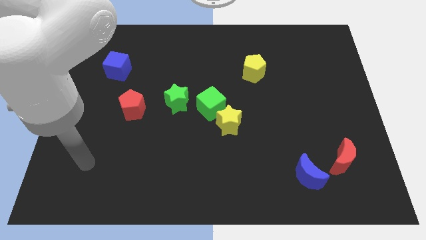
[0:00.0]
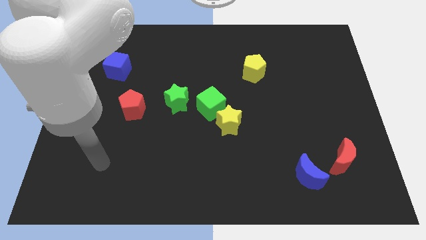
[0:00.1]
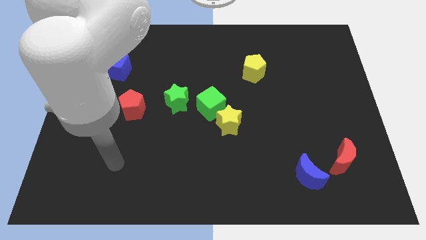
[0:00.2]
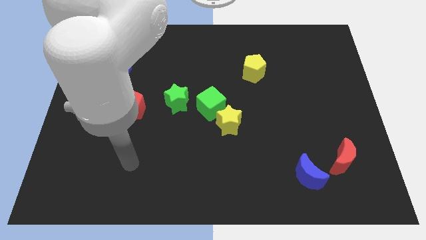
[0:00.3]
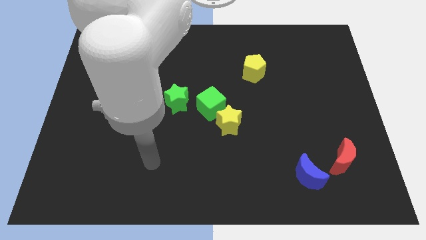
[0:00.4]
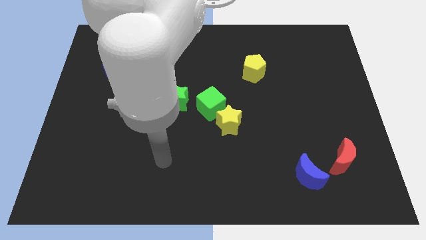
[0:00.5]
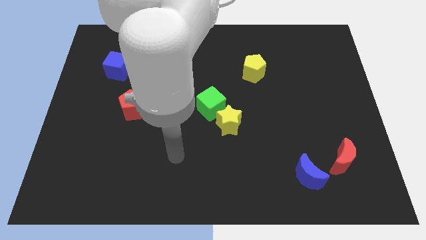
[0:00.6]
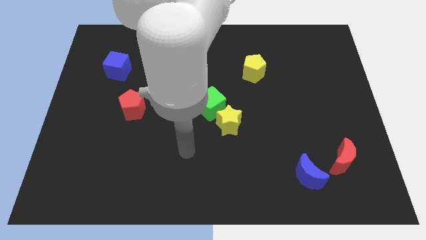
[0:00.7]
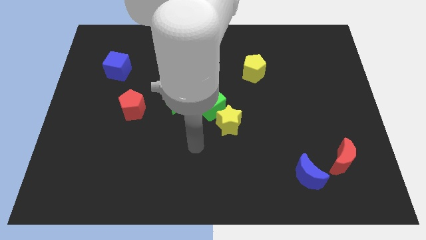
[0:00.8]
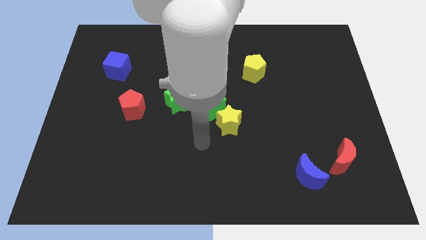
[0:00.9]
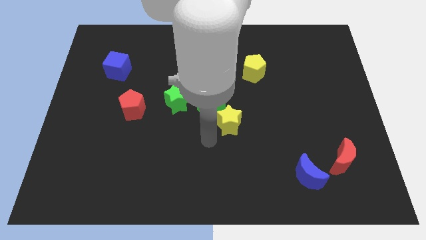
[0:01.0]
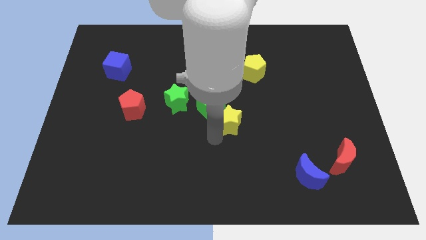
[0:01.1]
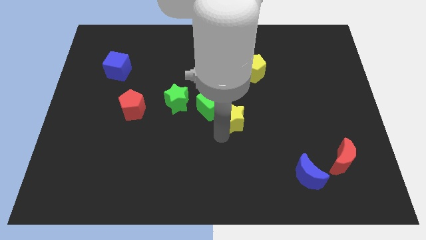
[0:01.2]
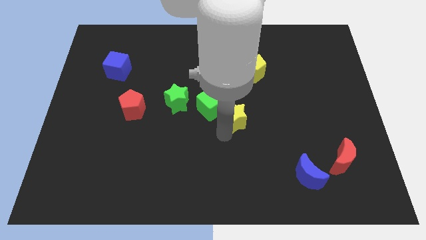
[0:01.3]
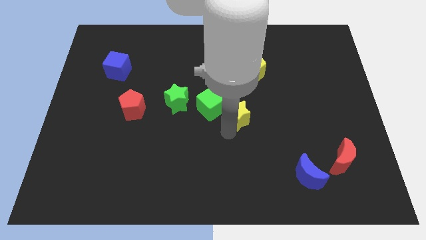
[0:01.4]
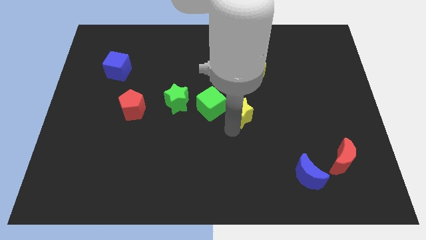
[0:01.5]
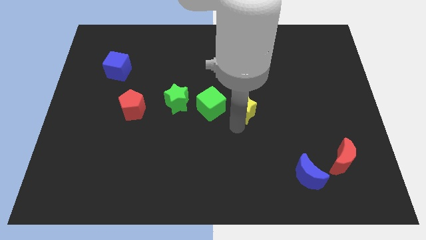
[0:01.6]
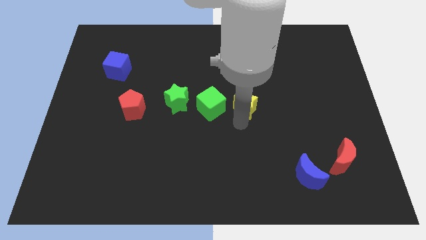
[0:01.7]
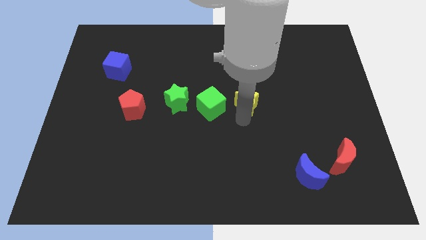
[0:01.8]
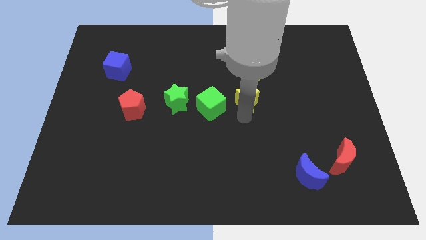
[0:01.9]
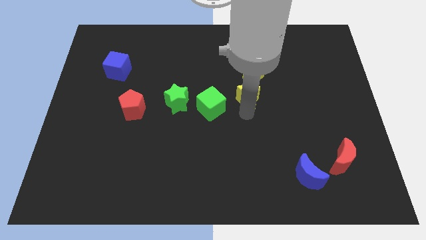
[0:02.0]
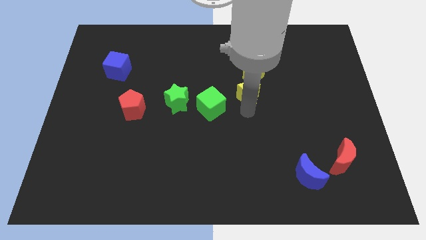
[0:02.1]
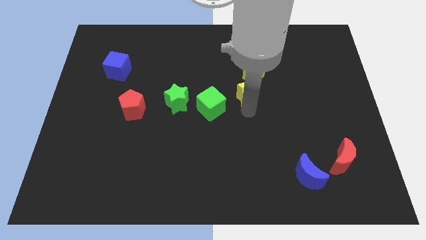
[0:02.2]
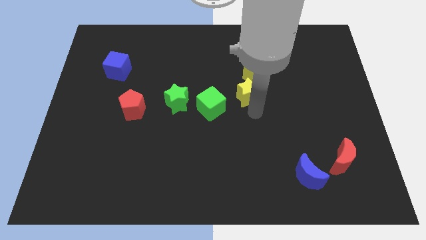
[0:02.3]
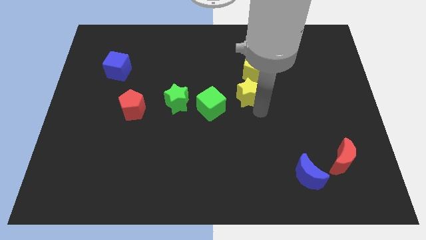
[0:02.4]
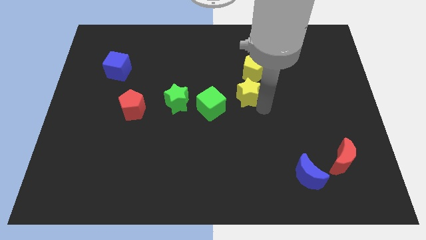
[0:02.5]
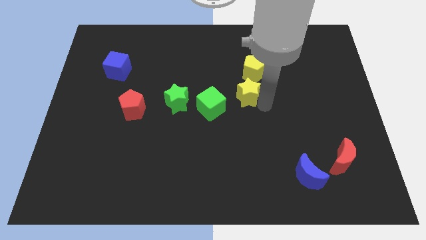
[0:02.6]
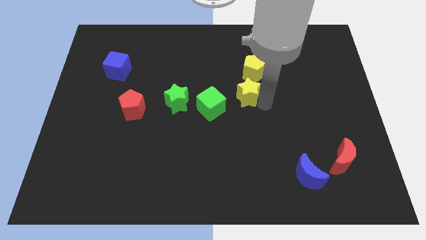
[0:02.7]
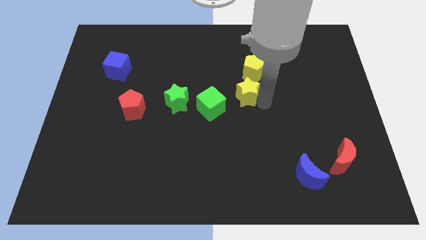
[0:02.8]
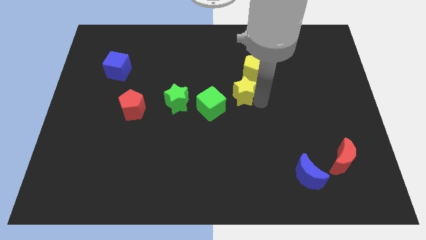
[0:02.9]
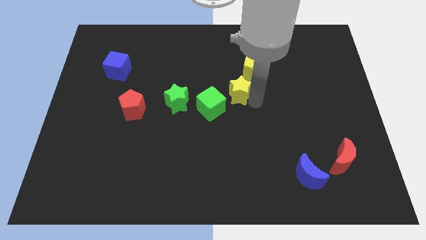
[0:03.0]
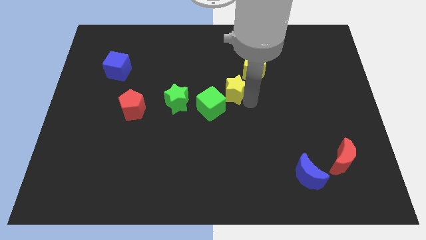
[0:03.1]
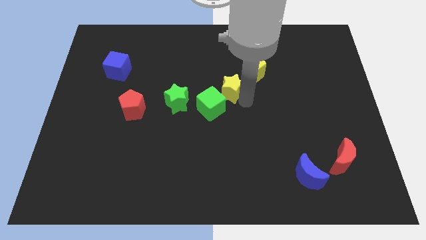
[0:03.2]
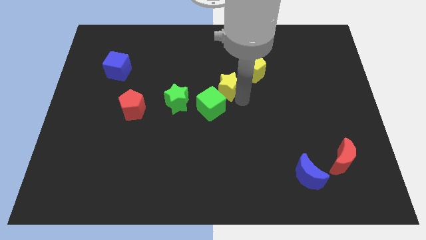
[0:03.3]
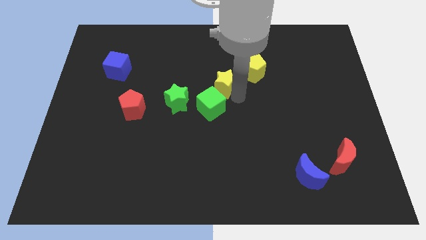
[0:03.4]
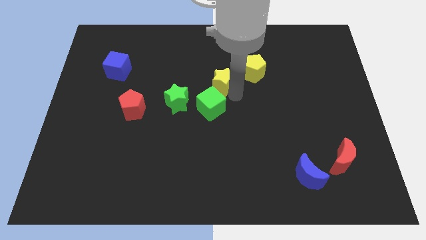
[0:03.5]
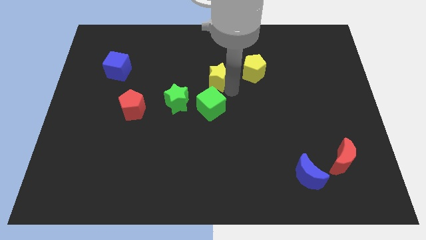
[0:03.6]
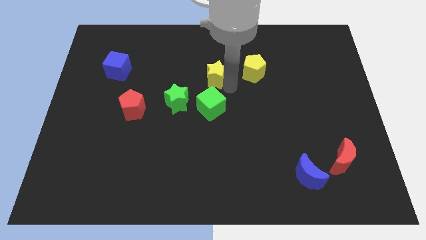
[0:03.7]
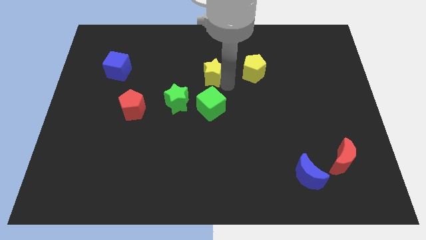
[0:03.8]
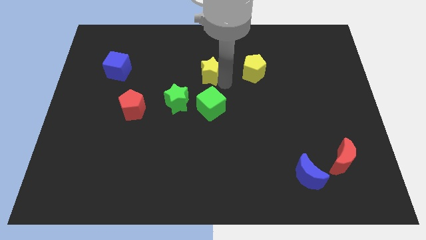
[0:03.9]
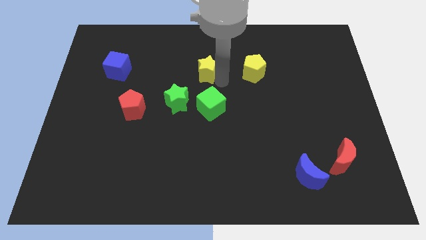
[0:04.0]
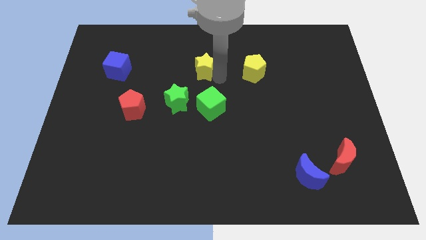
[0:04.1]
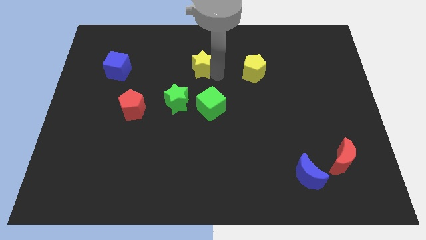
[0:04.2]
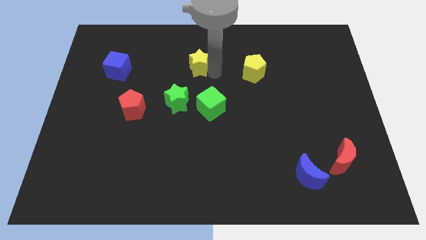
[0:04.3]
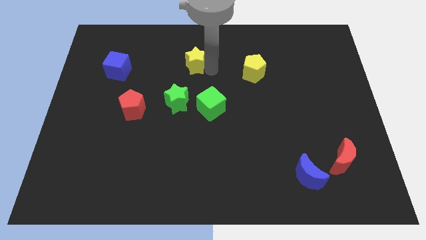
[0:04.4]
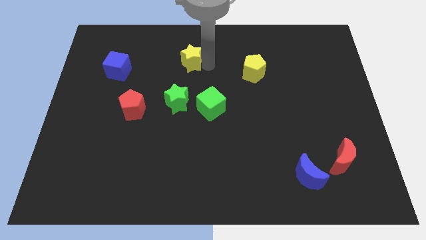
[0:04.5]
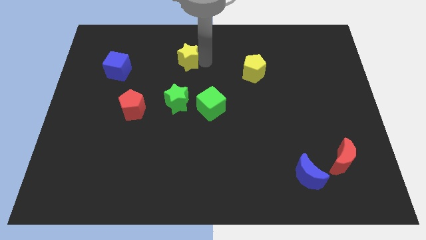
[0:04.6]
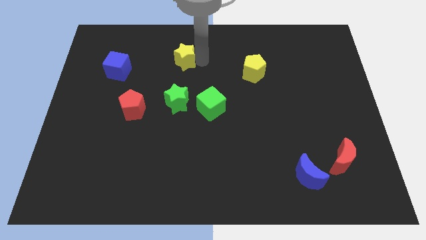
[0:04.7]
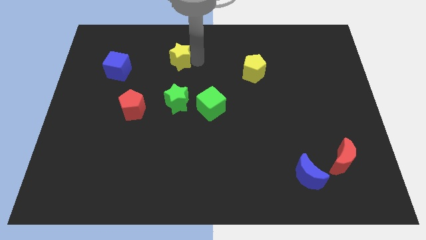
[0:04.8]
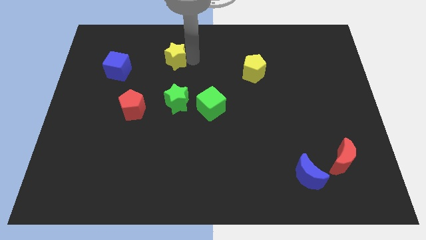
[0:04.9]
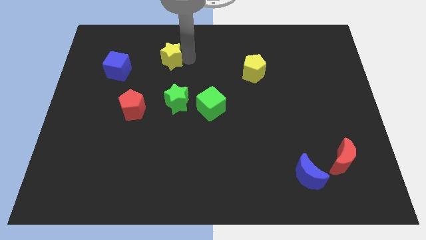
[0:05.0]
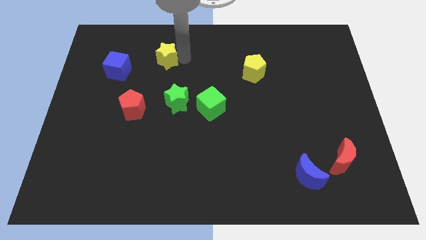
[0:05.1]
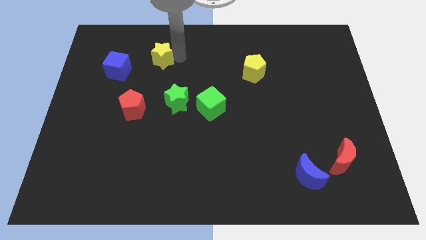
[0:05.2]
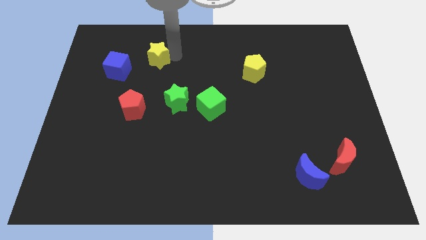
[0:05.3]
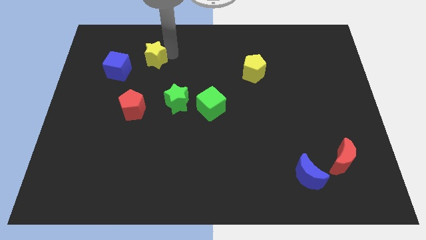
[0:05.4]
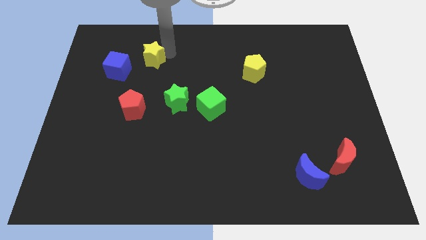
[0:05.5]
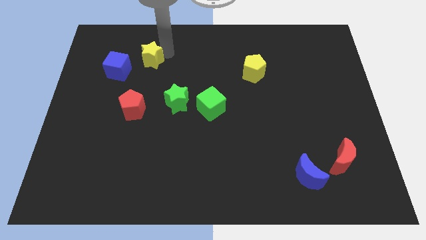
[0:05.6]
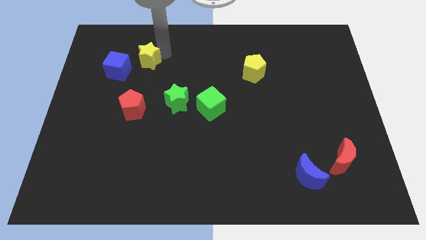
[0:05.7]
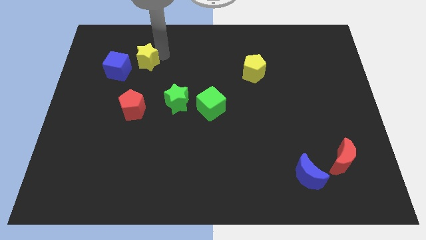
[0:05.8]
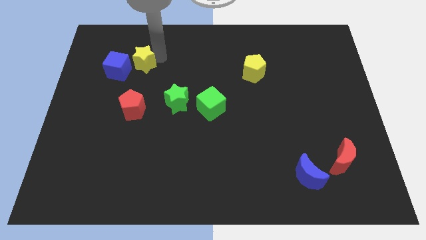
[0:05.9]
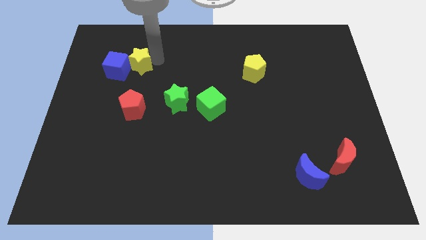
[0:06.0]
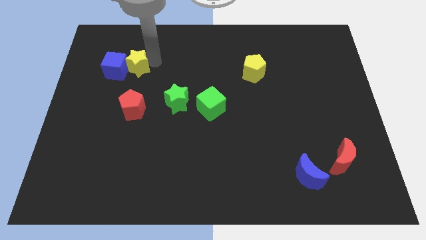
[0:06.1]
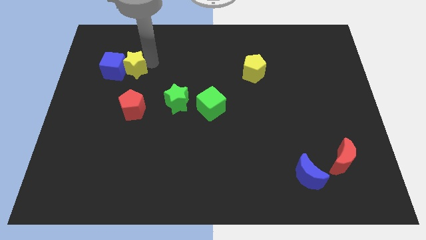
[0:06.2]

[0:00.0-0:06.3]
move the yellow star close to the blue cube

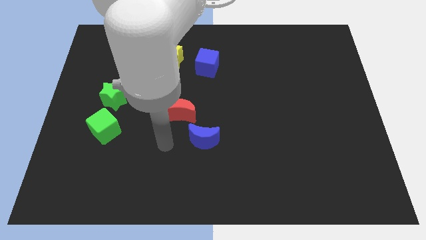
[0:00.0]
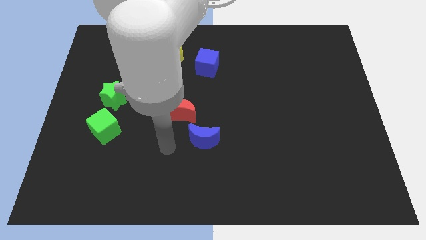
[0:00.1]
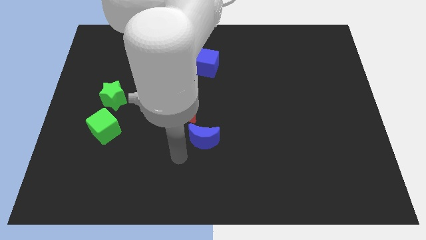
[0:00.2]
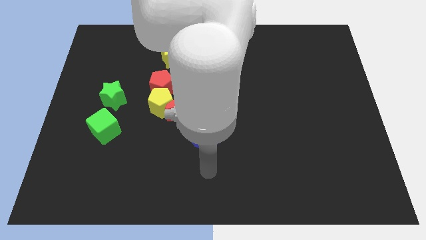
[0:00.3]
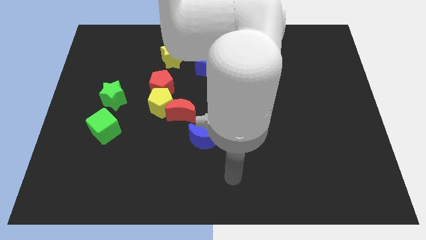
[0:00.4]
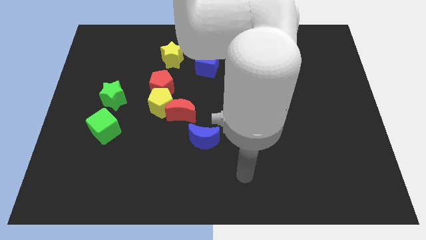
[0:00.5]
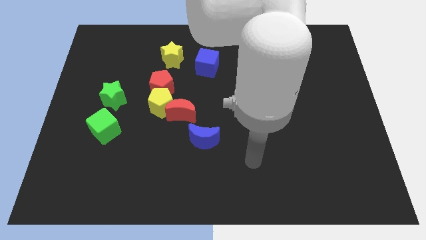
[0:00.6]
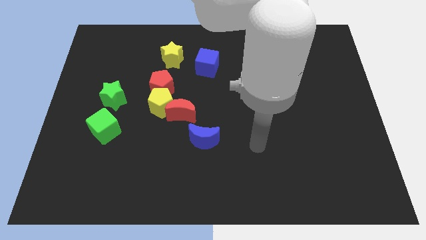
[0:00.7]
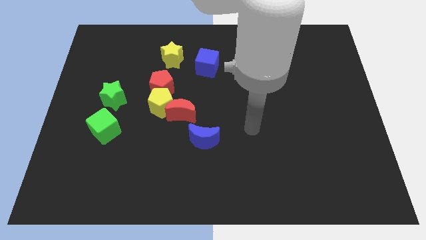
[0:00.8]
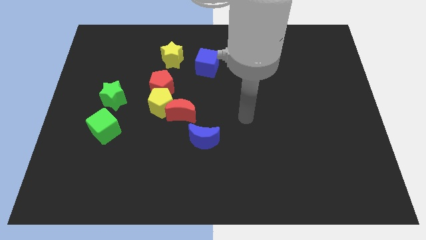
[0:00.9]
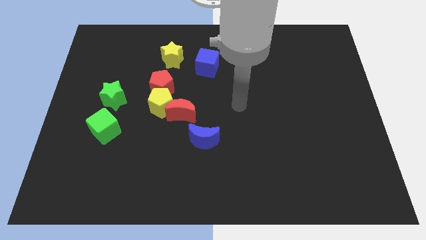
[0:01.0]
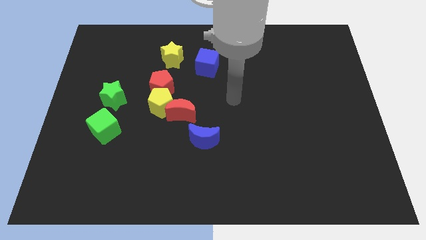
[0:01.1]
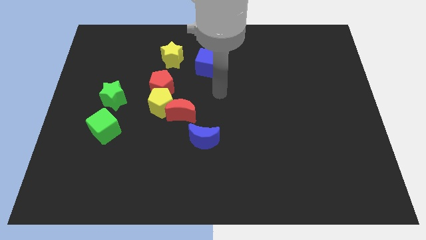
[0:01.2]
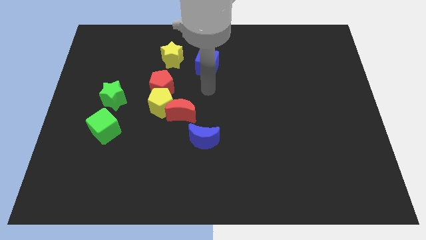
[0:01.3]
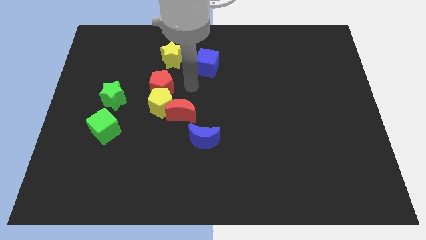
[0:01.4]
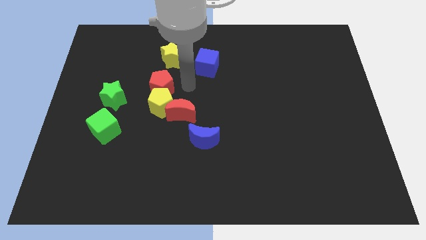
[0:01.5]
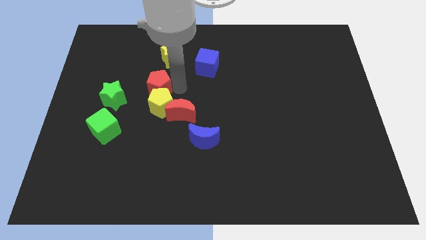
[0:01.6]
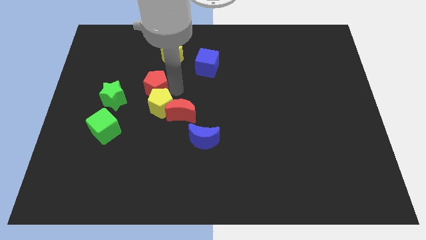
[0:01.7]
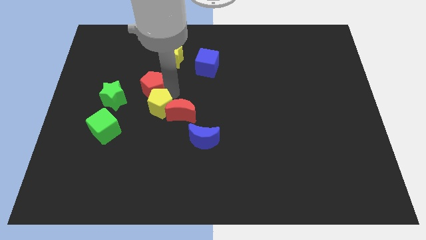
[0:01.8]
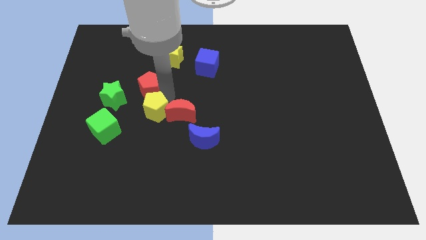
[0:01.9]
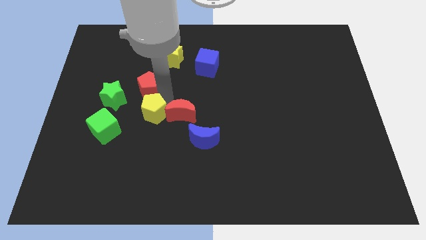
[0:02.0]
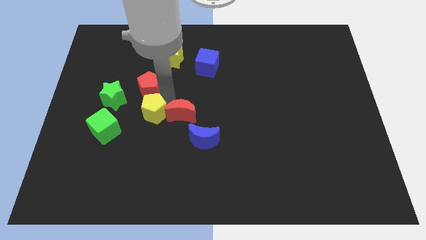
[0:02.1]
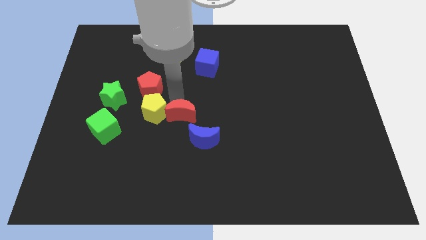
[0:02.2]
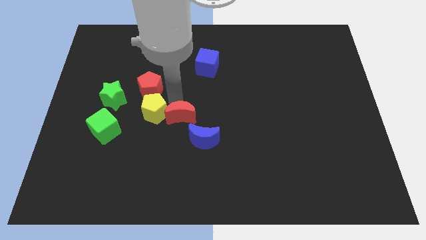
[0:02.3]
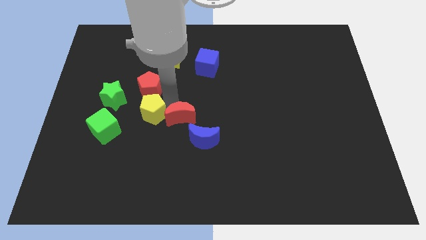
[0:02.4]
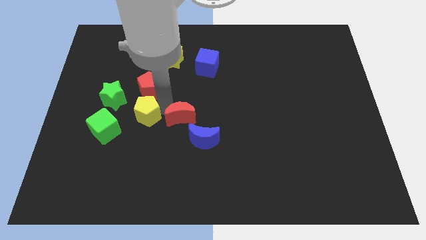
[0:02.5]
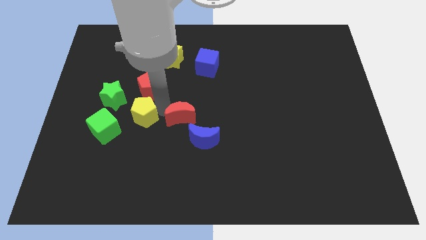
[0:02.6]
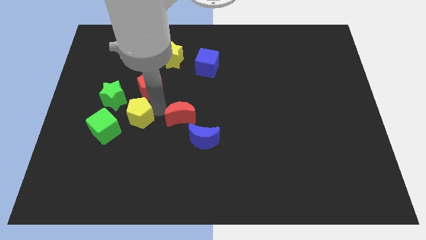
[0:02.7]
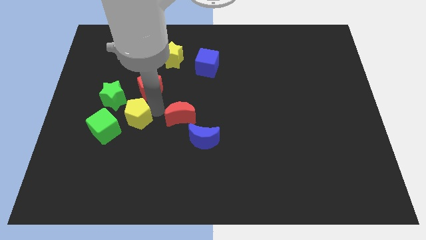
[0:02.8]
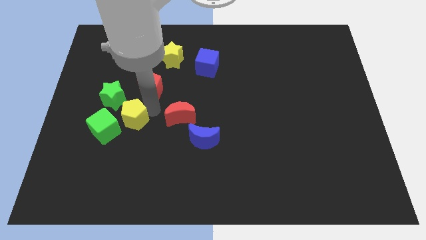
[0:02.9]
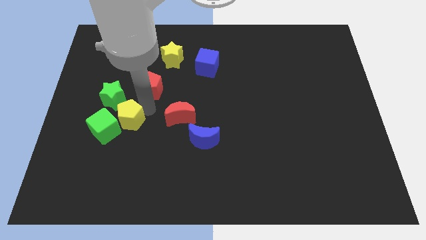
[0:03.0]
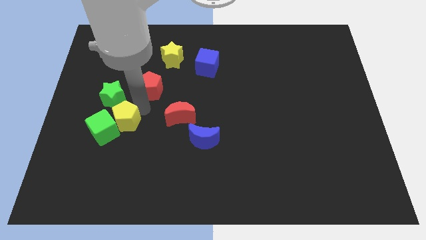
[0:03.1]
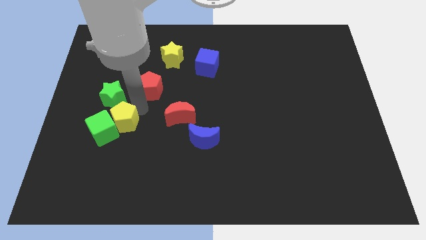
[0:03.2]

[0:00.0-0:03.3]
put the yellow pentagon to the green cube
